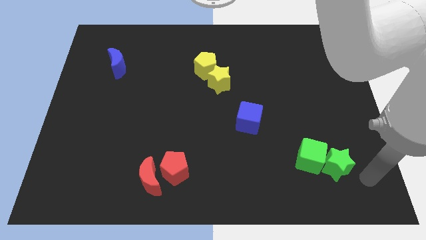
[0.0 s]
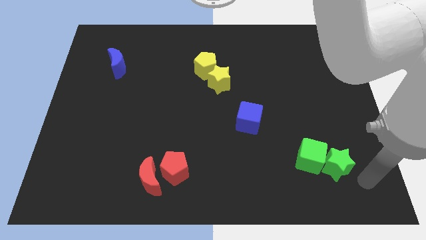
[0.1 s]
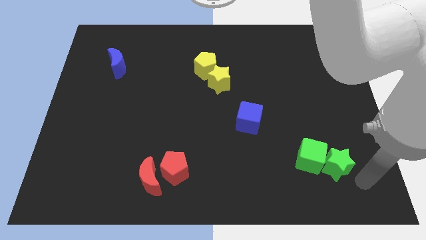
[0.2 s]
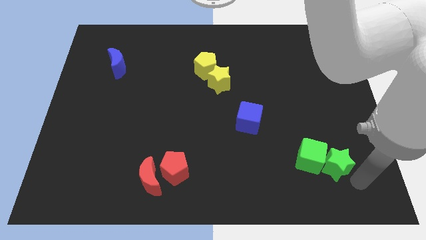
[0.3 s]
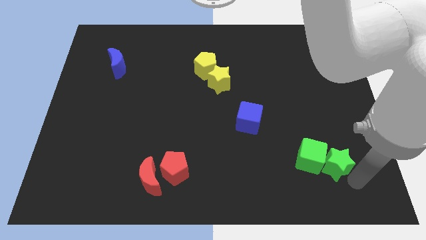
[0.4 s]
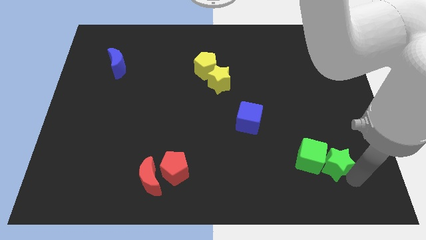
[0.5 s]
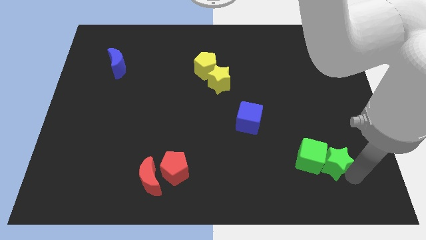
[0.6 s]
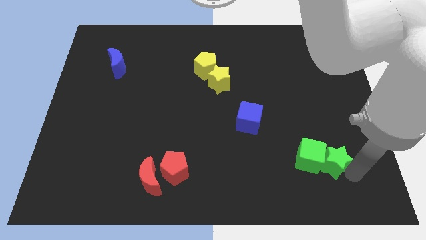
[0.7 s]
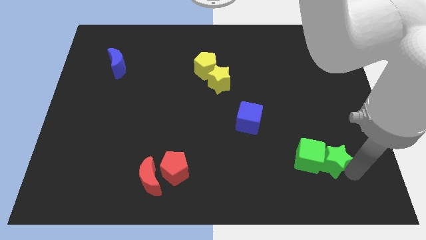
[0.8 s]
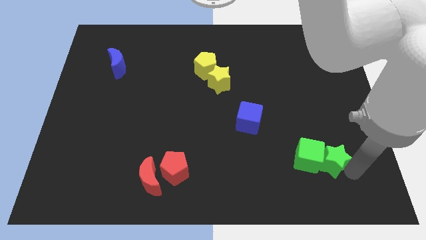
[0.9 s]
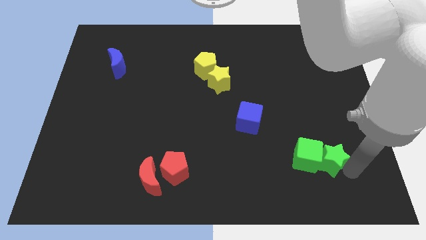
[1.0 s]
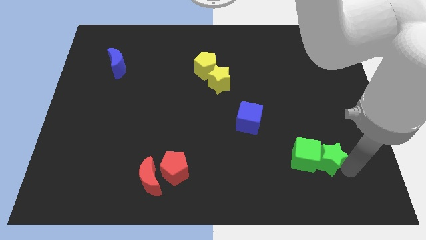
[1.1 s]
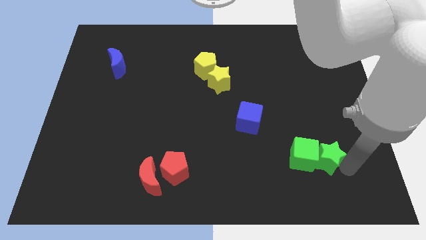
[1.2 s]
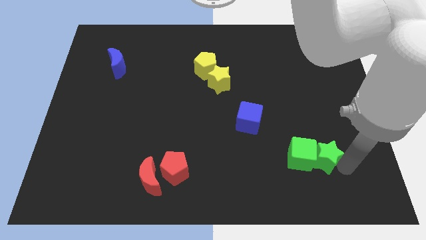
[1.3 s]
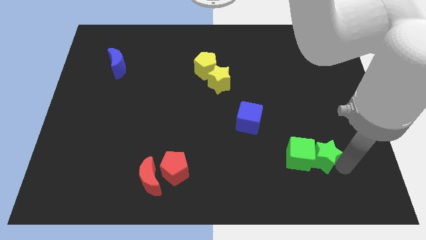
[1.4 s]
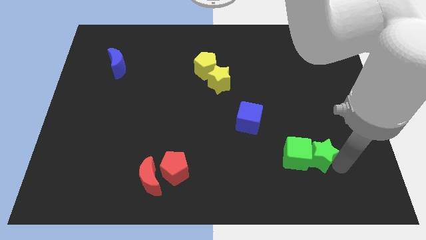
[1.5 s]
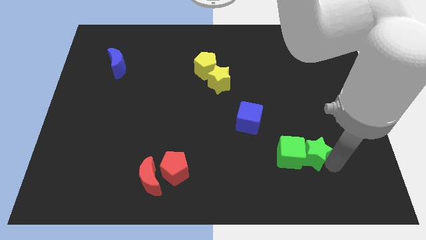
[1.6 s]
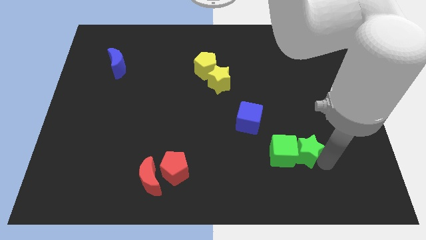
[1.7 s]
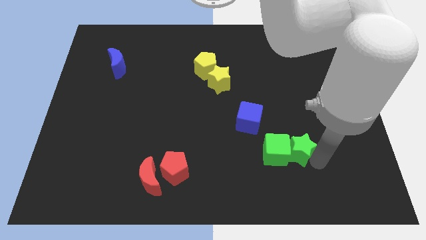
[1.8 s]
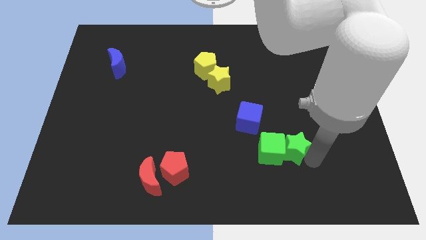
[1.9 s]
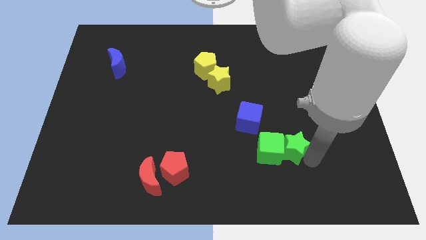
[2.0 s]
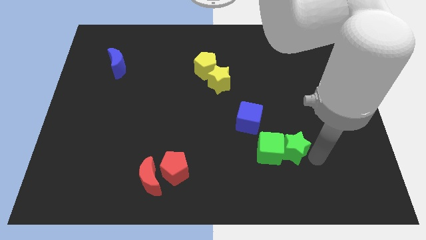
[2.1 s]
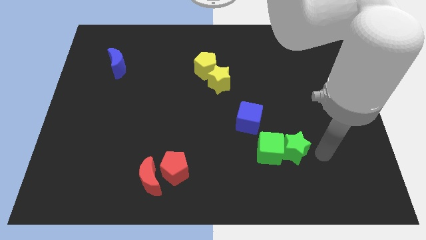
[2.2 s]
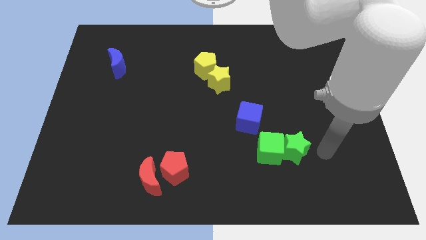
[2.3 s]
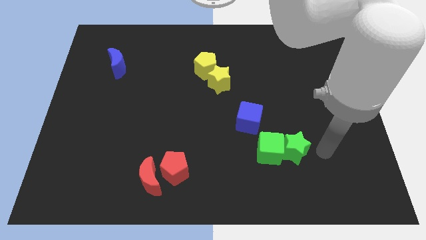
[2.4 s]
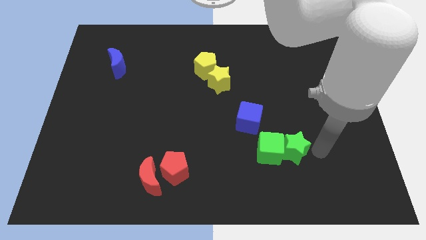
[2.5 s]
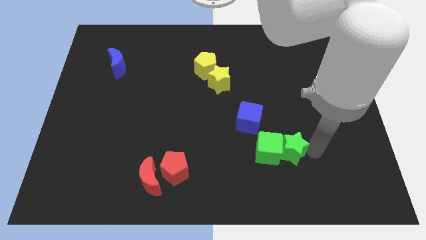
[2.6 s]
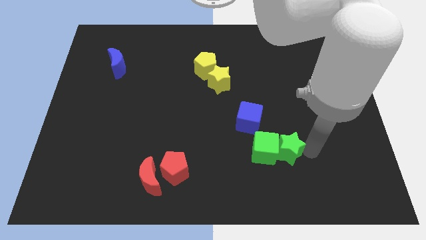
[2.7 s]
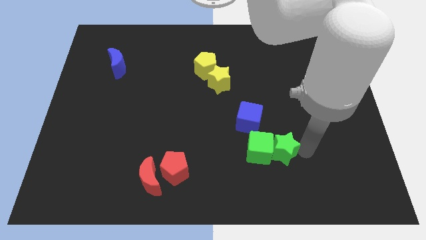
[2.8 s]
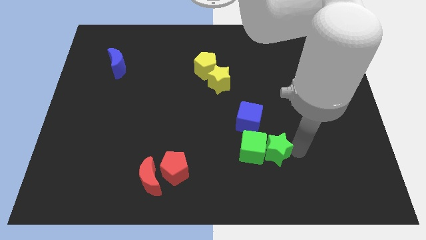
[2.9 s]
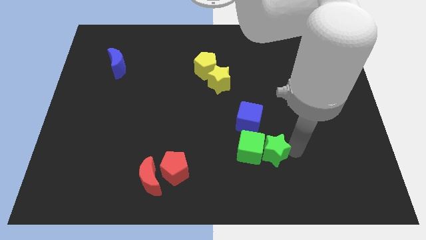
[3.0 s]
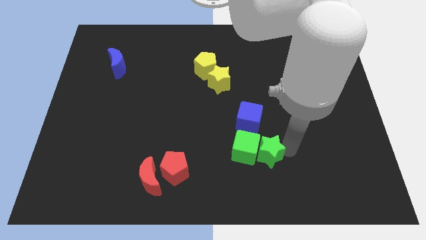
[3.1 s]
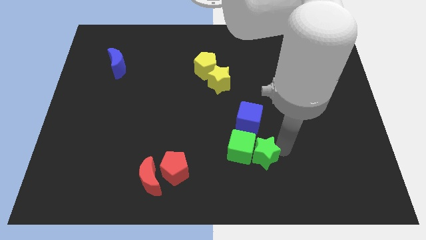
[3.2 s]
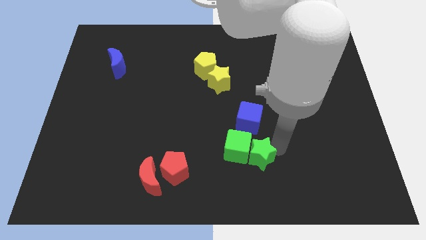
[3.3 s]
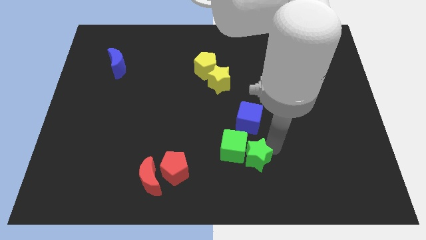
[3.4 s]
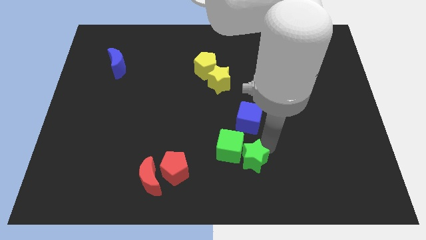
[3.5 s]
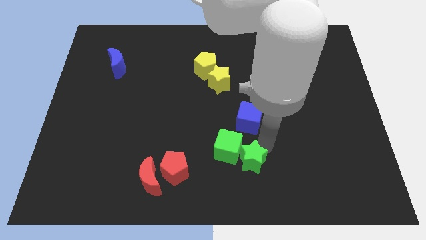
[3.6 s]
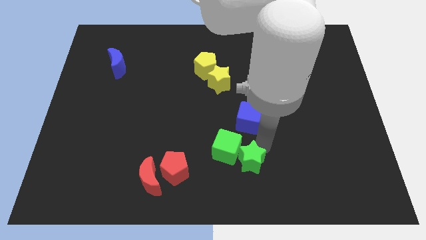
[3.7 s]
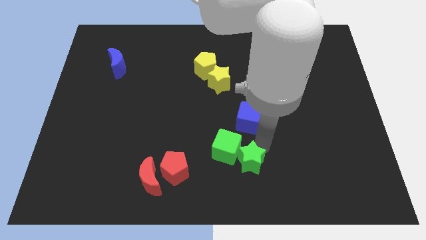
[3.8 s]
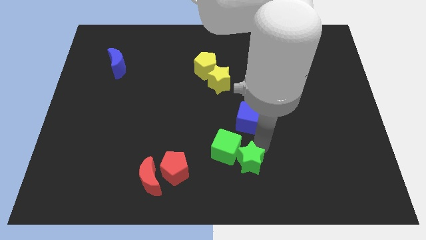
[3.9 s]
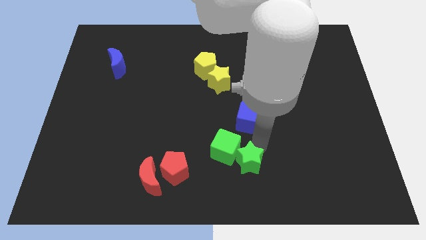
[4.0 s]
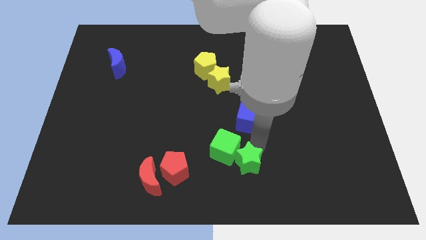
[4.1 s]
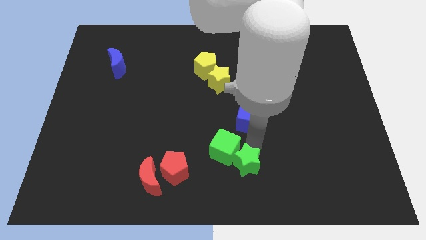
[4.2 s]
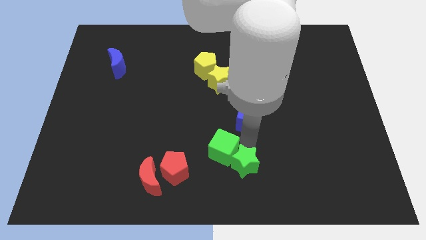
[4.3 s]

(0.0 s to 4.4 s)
push the green cube to the left towards the center with the green star

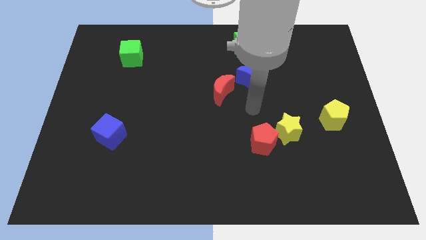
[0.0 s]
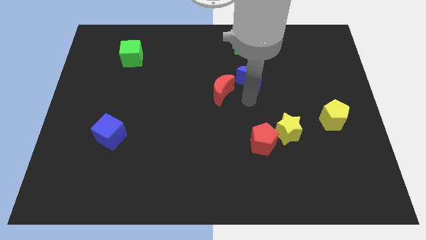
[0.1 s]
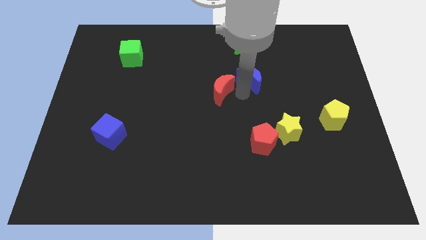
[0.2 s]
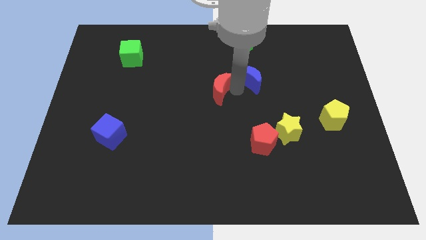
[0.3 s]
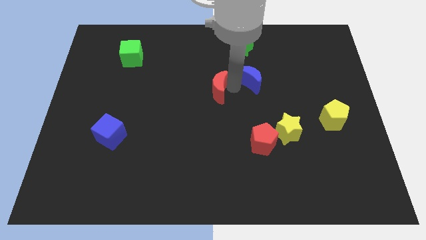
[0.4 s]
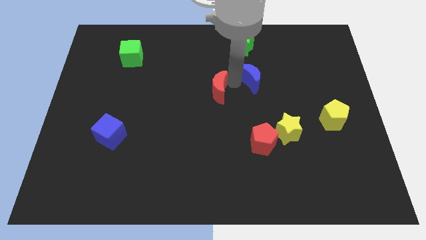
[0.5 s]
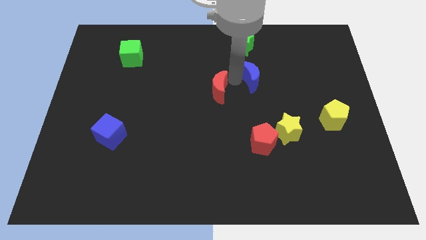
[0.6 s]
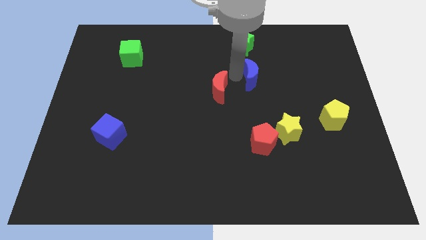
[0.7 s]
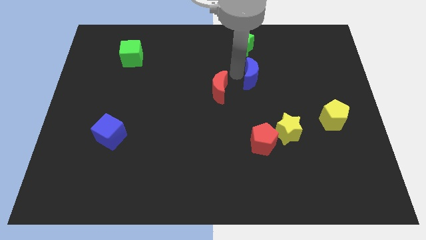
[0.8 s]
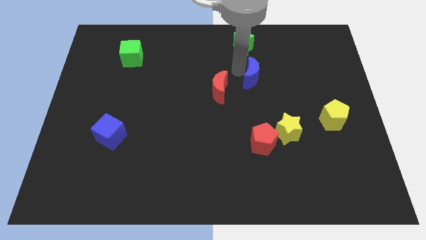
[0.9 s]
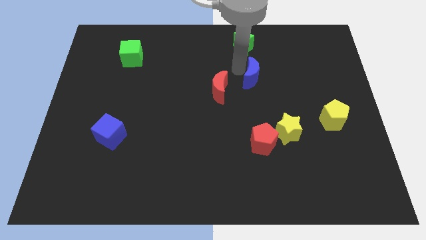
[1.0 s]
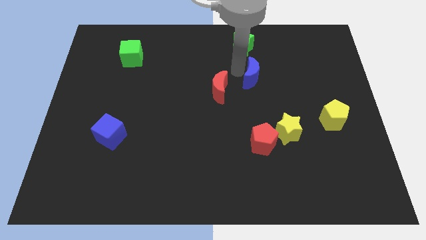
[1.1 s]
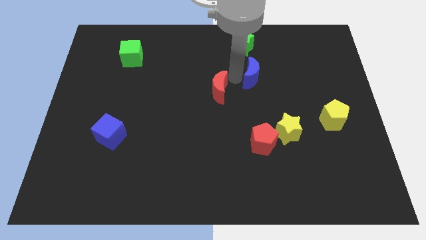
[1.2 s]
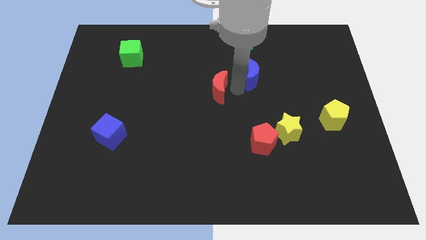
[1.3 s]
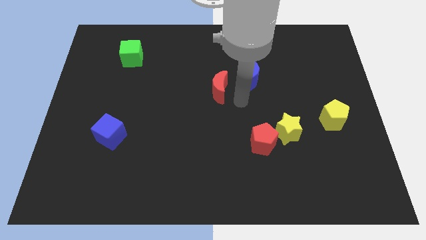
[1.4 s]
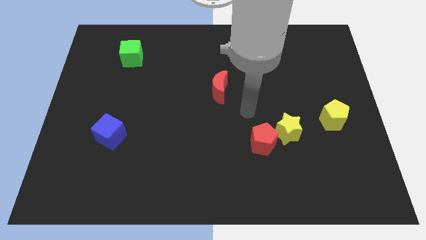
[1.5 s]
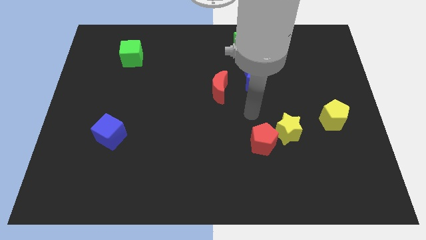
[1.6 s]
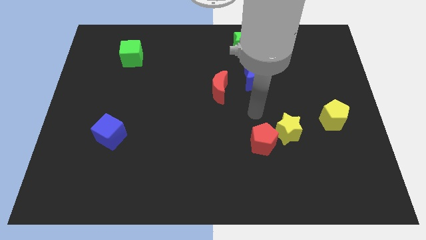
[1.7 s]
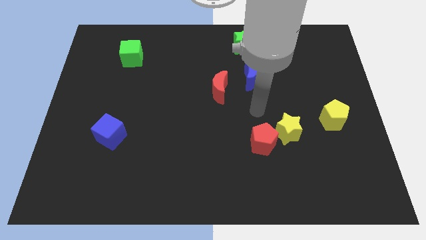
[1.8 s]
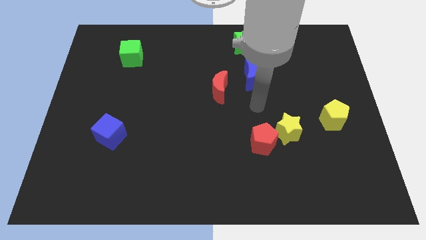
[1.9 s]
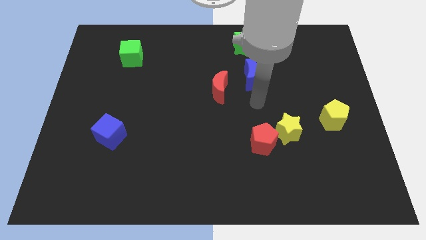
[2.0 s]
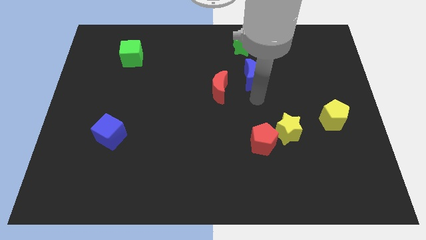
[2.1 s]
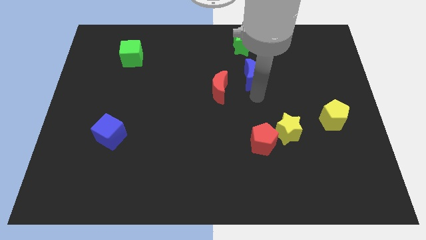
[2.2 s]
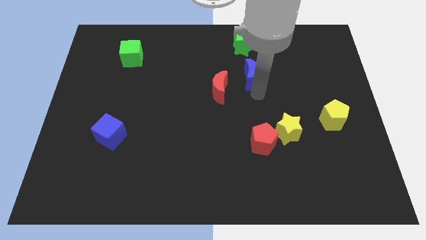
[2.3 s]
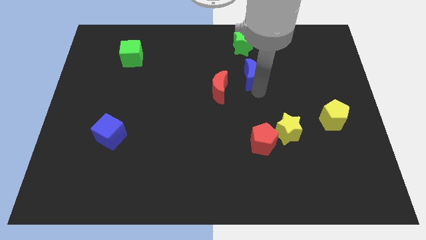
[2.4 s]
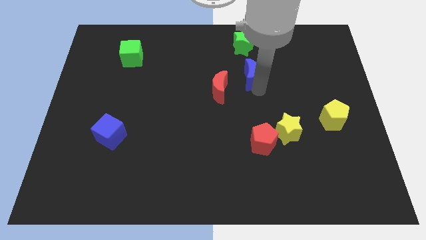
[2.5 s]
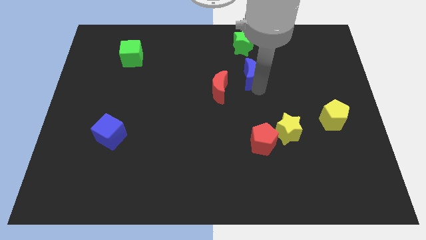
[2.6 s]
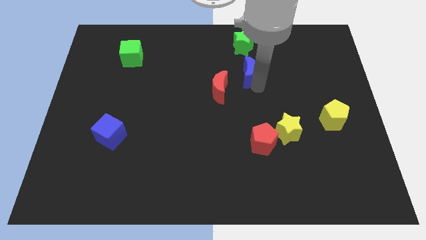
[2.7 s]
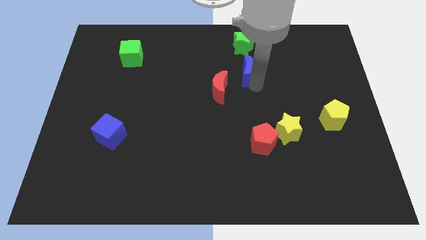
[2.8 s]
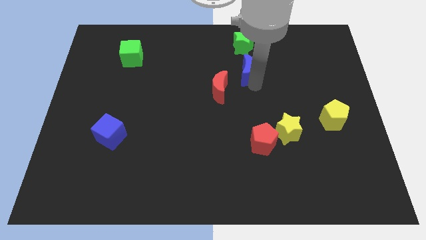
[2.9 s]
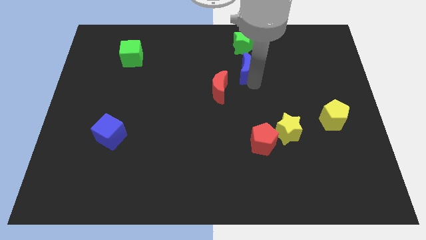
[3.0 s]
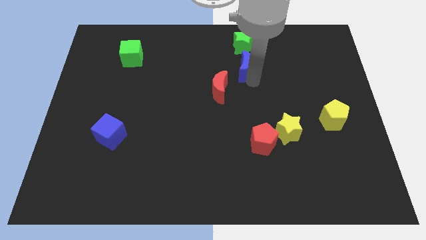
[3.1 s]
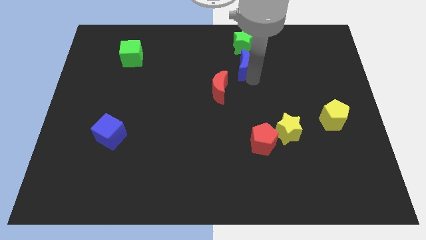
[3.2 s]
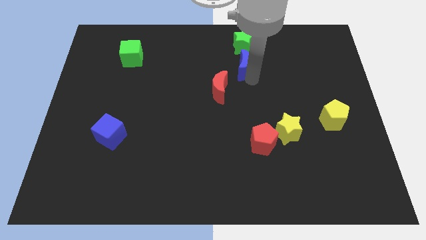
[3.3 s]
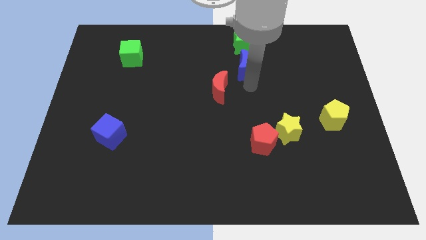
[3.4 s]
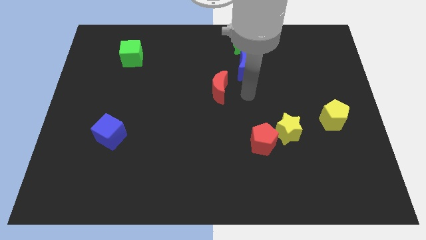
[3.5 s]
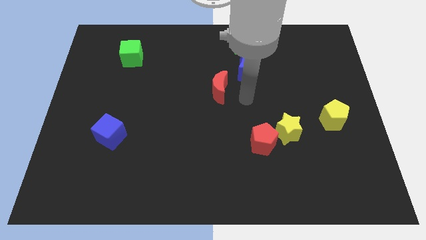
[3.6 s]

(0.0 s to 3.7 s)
slightly move the blue moon up

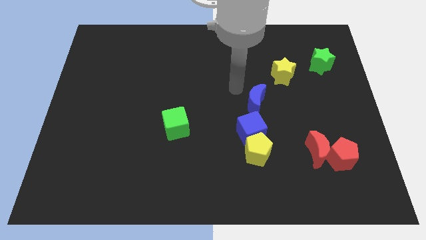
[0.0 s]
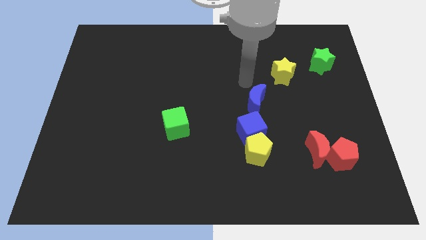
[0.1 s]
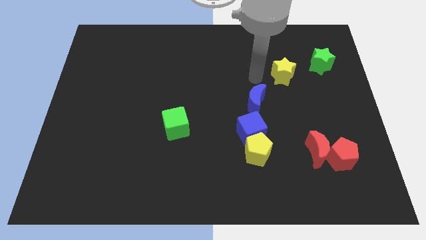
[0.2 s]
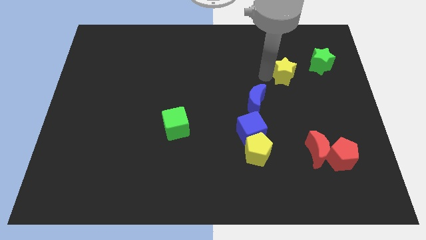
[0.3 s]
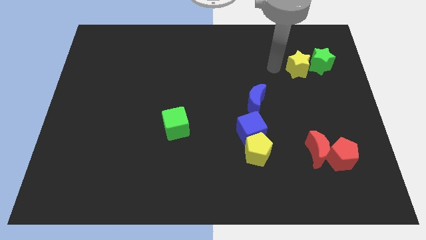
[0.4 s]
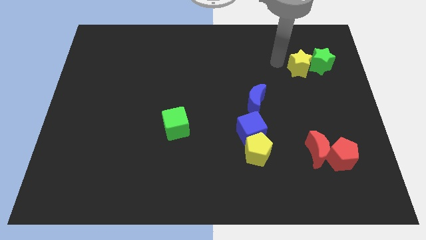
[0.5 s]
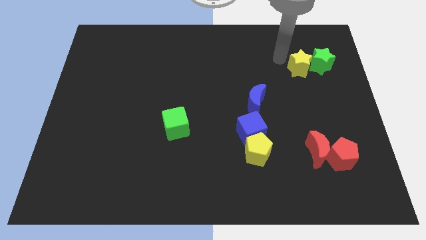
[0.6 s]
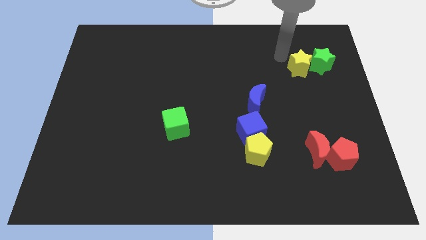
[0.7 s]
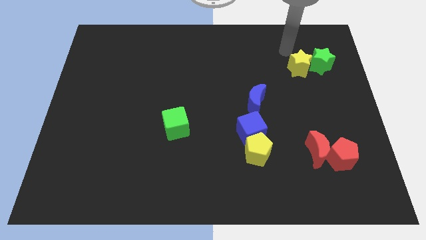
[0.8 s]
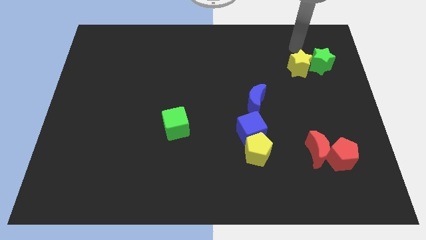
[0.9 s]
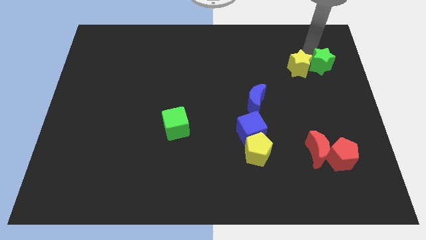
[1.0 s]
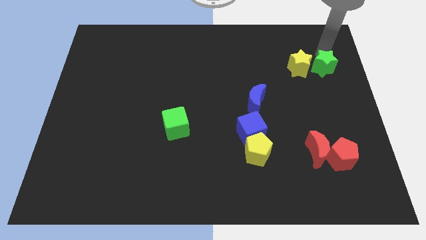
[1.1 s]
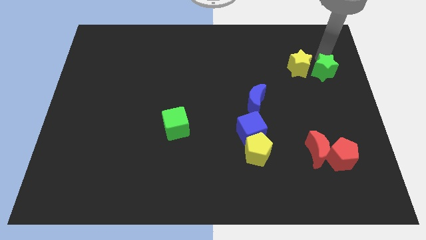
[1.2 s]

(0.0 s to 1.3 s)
move the green star and yellow star horizontally to each other
